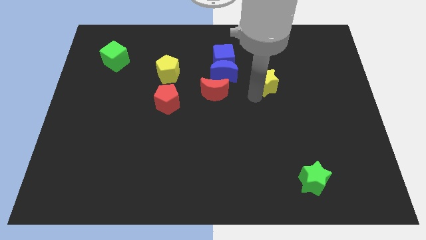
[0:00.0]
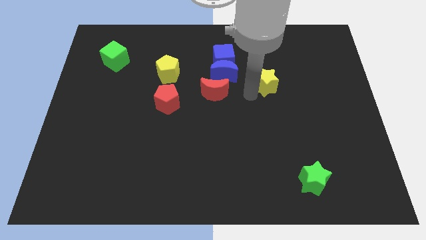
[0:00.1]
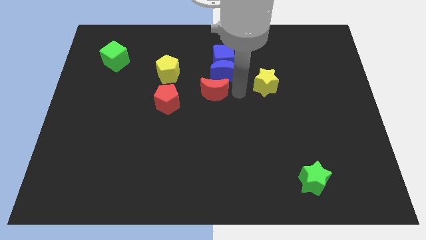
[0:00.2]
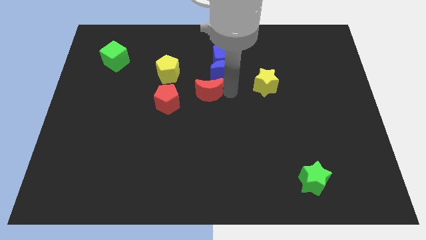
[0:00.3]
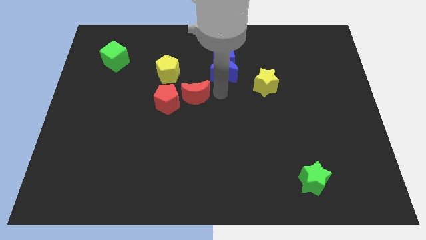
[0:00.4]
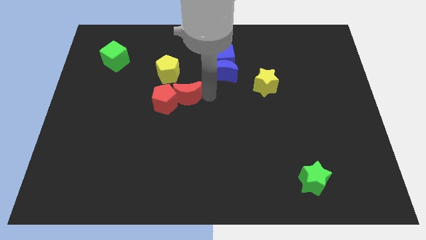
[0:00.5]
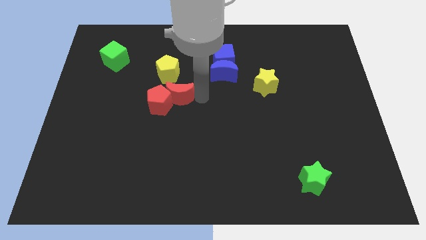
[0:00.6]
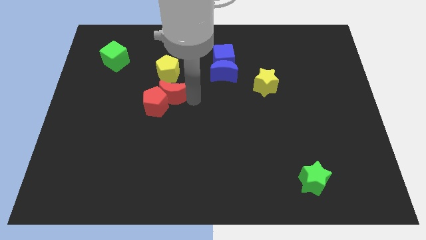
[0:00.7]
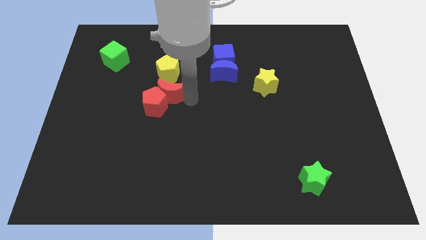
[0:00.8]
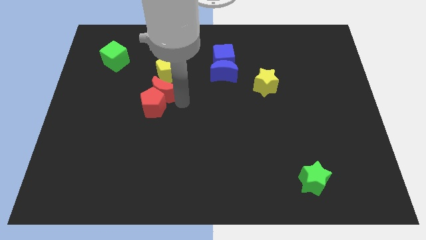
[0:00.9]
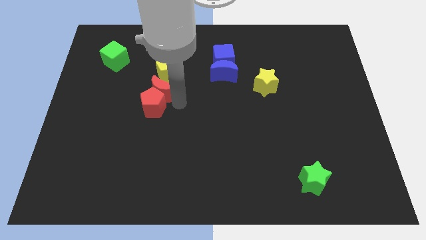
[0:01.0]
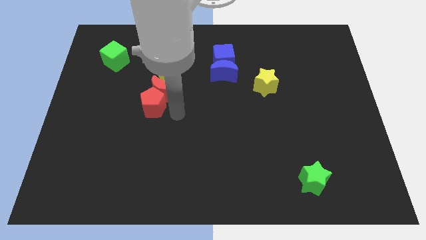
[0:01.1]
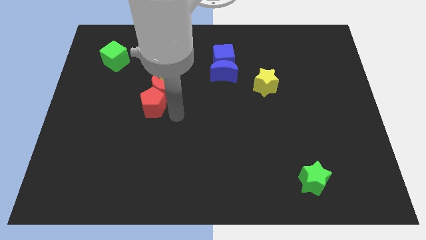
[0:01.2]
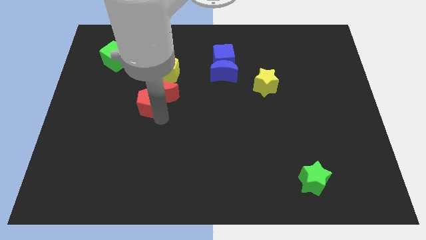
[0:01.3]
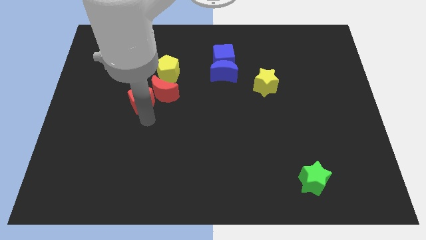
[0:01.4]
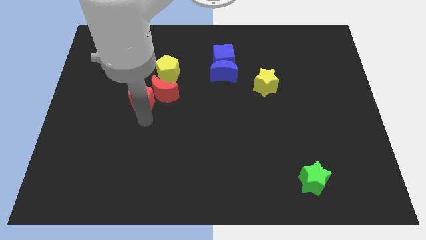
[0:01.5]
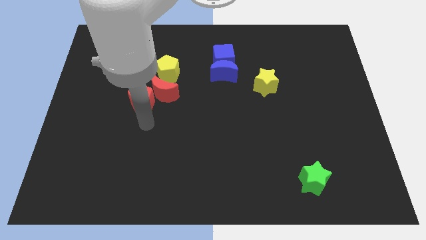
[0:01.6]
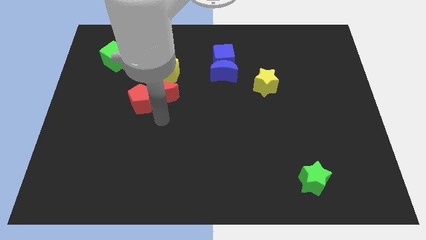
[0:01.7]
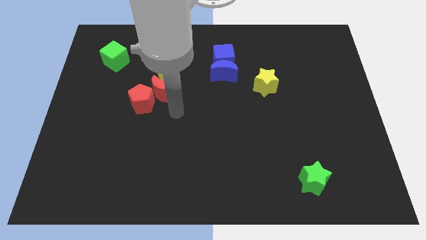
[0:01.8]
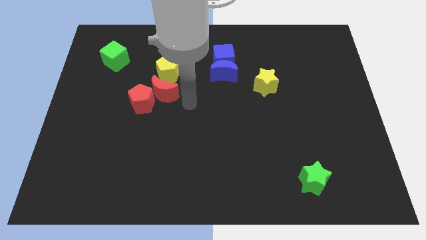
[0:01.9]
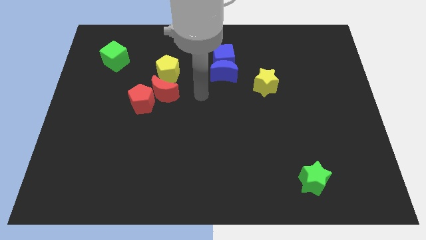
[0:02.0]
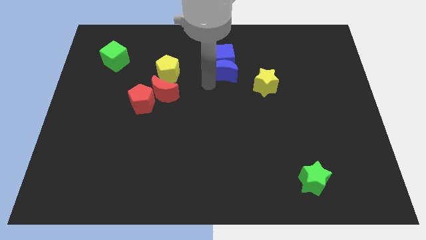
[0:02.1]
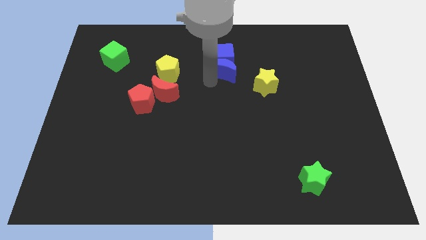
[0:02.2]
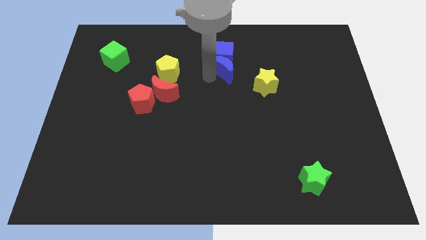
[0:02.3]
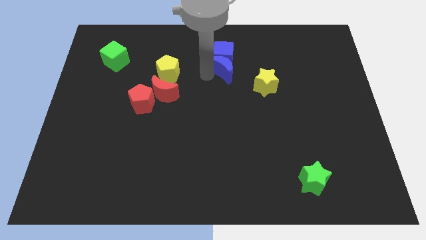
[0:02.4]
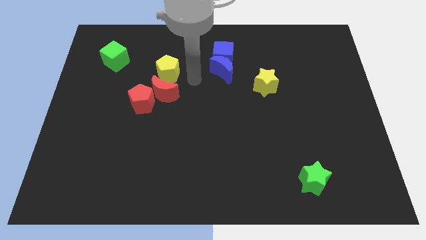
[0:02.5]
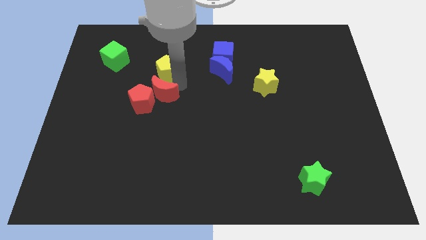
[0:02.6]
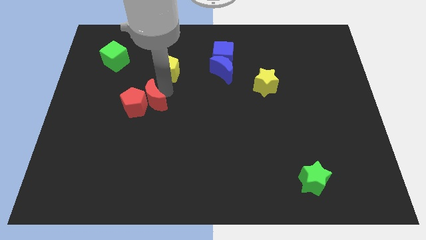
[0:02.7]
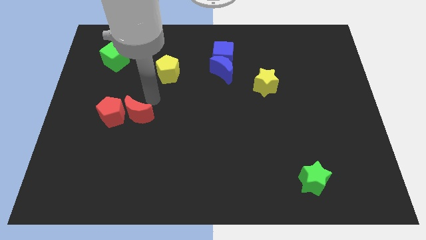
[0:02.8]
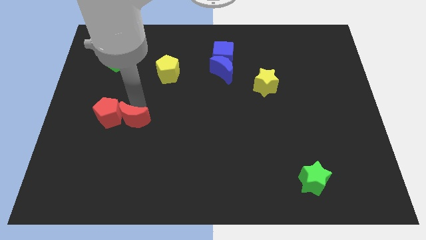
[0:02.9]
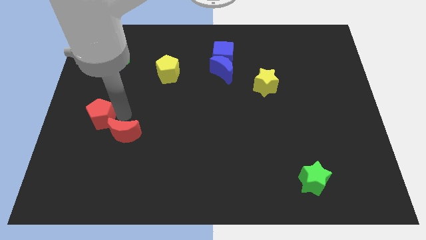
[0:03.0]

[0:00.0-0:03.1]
push the red moon into the red pentagon

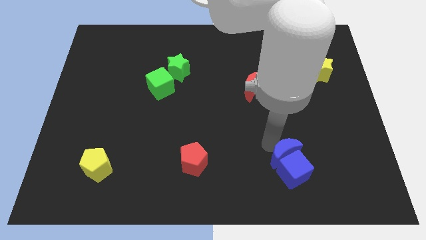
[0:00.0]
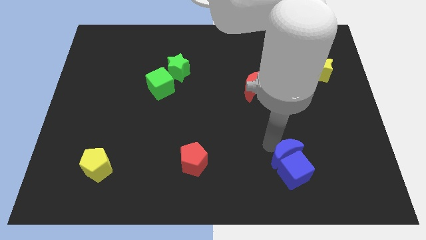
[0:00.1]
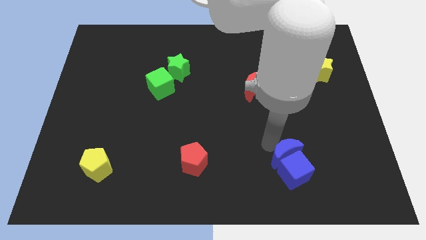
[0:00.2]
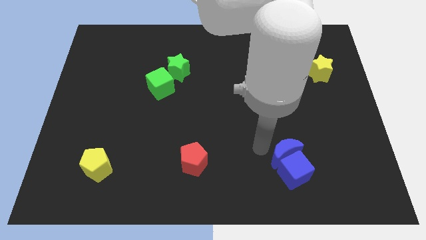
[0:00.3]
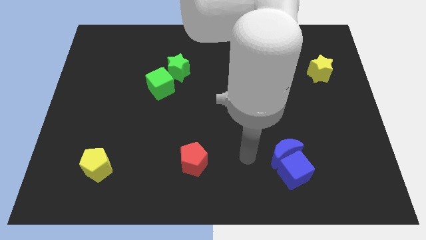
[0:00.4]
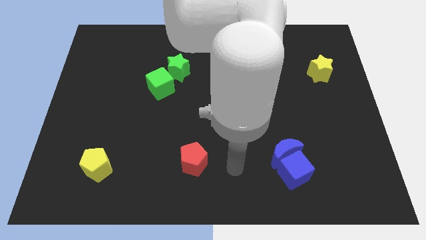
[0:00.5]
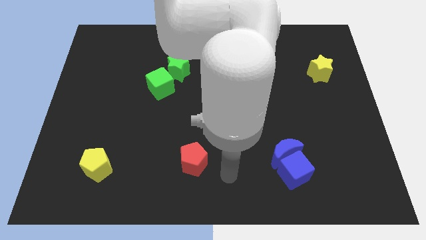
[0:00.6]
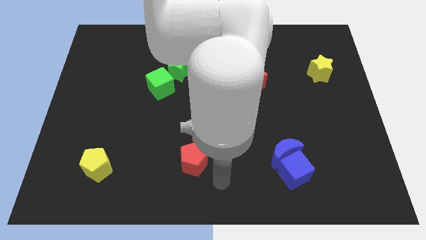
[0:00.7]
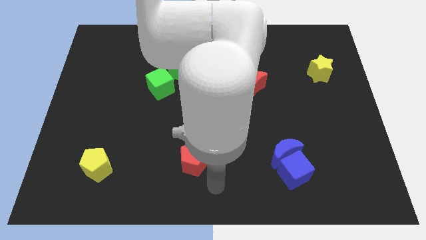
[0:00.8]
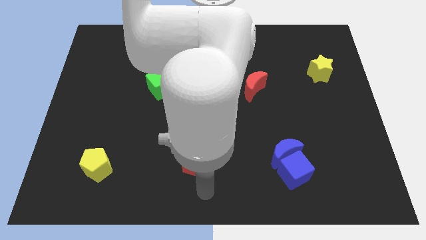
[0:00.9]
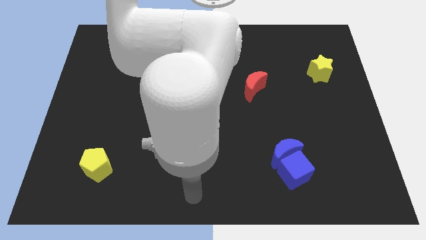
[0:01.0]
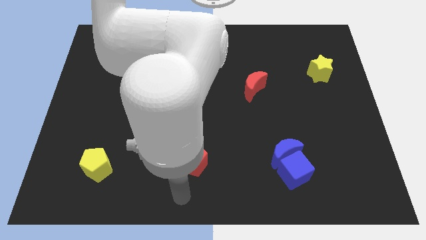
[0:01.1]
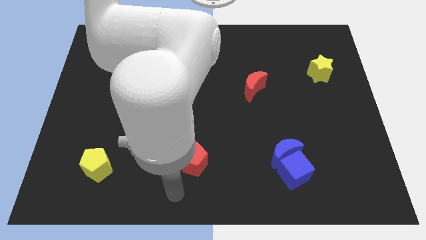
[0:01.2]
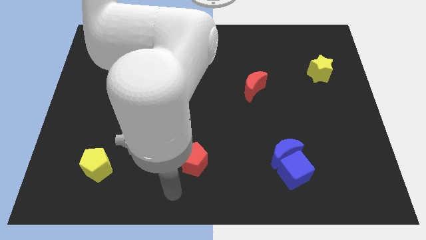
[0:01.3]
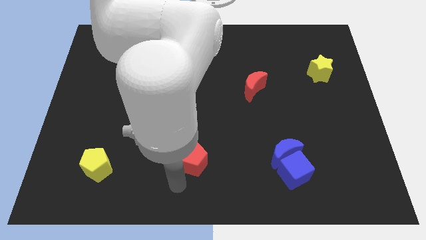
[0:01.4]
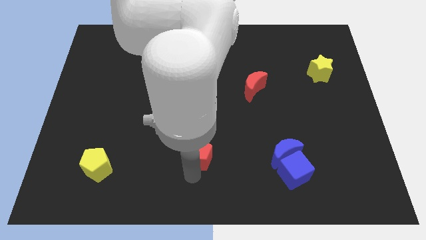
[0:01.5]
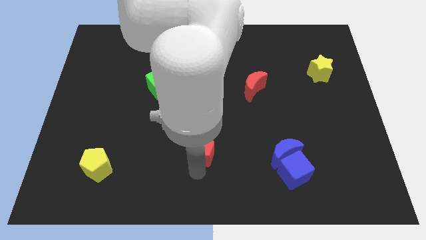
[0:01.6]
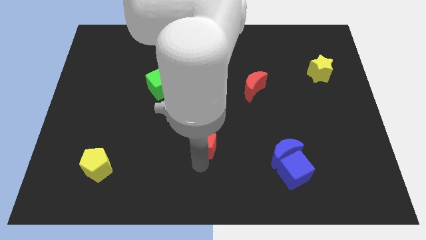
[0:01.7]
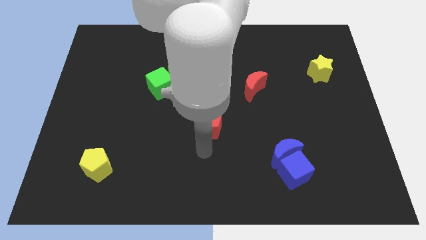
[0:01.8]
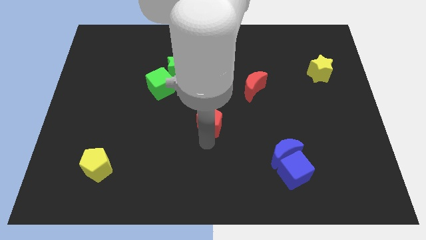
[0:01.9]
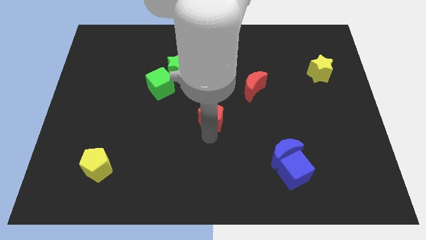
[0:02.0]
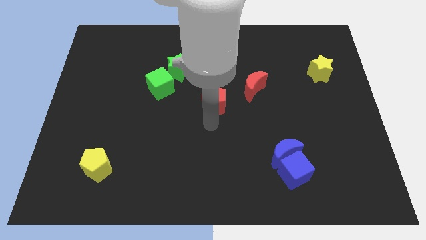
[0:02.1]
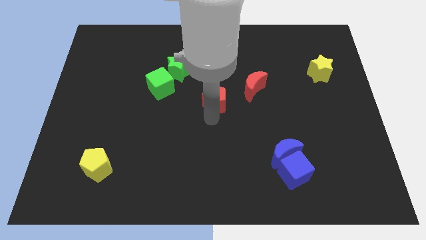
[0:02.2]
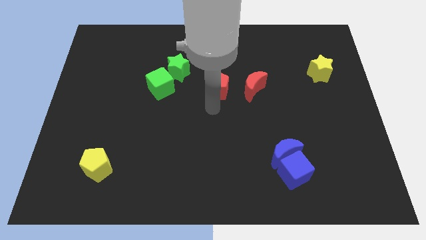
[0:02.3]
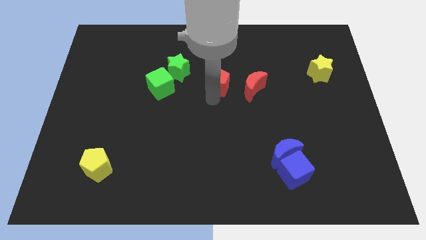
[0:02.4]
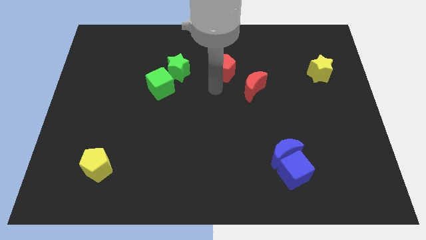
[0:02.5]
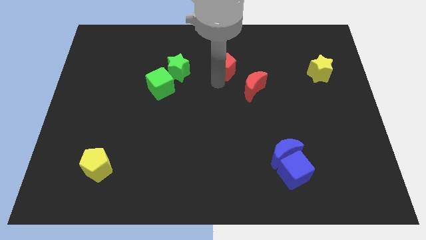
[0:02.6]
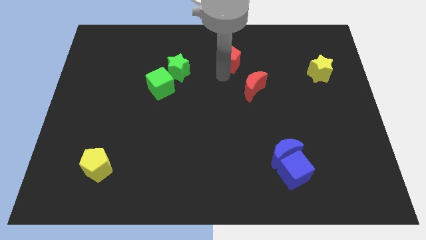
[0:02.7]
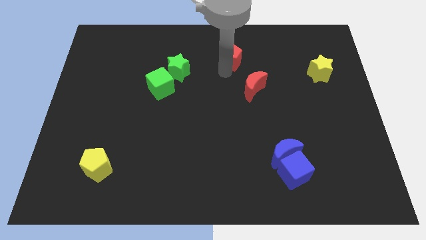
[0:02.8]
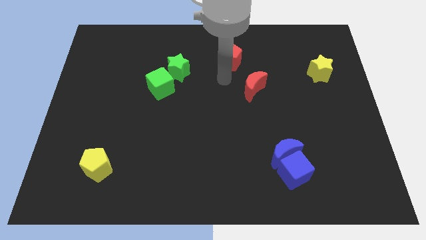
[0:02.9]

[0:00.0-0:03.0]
place red pentagon to the top left of red moon

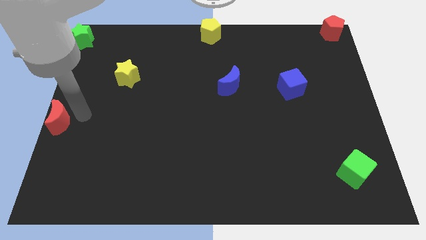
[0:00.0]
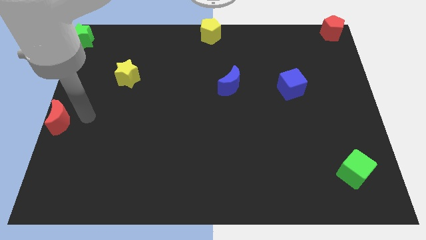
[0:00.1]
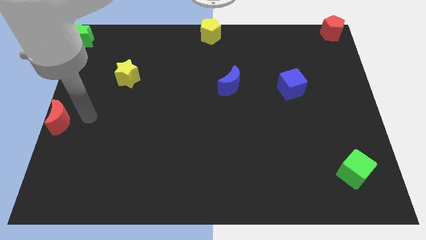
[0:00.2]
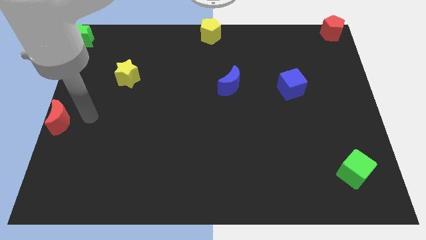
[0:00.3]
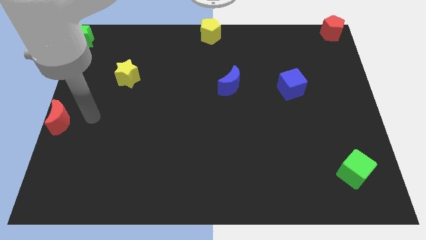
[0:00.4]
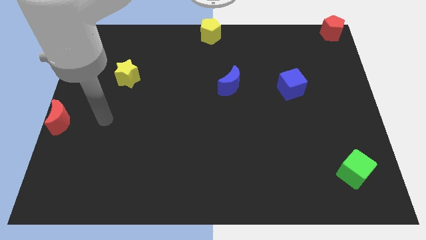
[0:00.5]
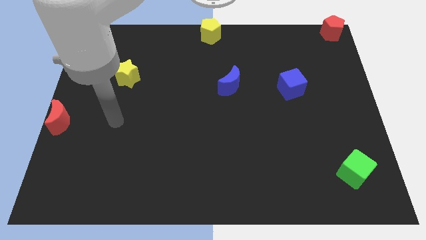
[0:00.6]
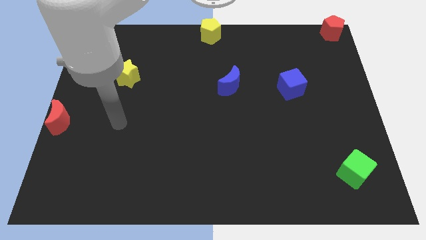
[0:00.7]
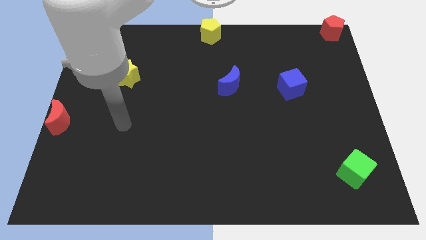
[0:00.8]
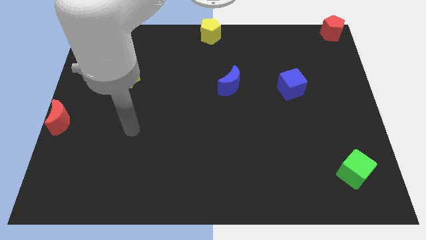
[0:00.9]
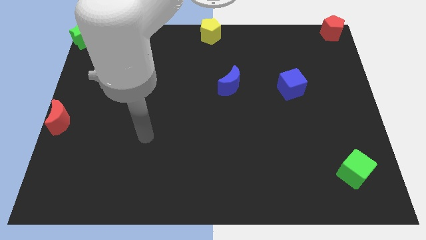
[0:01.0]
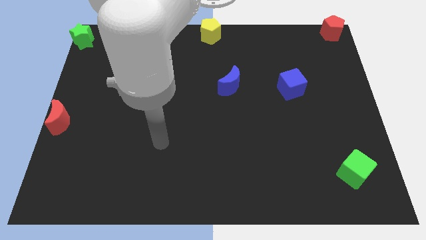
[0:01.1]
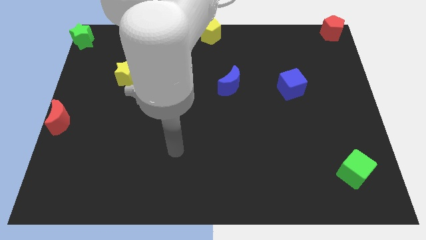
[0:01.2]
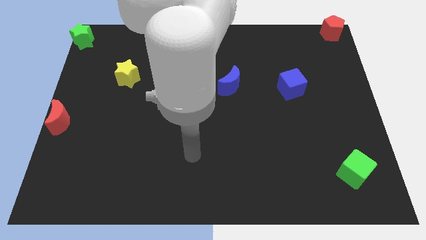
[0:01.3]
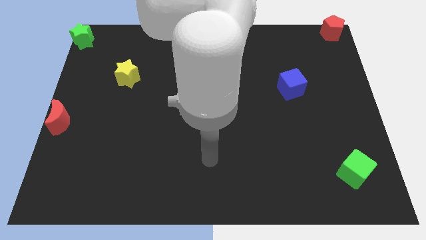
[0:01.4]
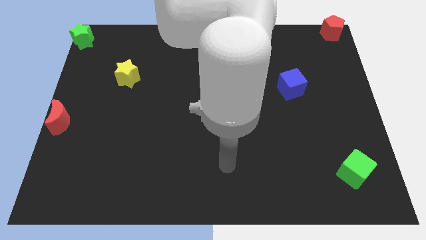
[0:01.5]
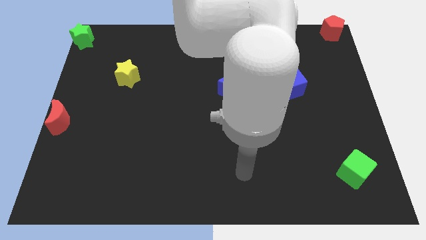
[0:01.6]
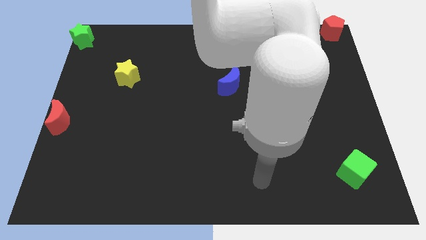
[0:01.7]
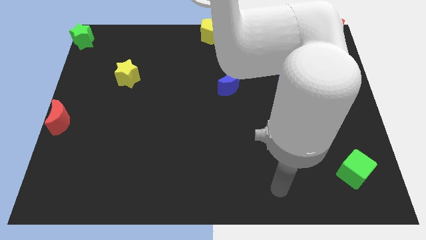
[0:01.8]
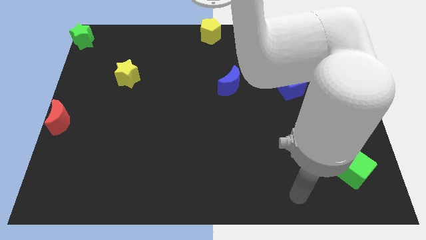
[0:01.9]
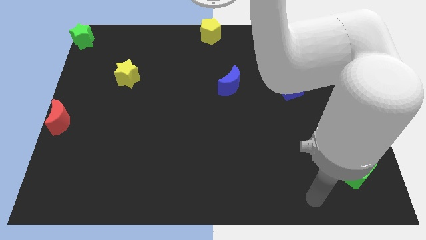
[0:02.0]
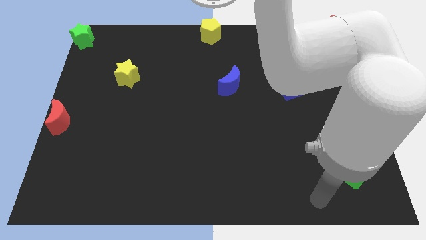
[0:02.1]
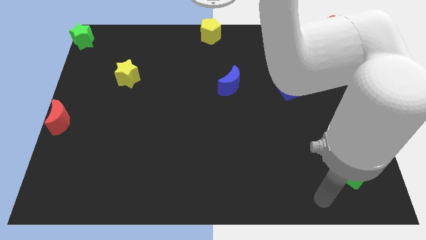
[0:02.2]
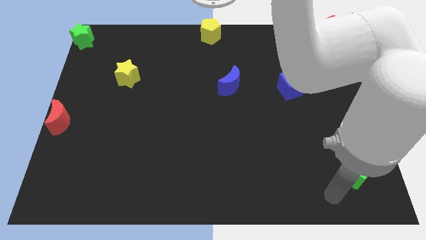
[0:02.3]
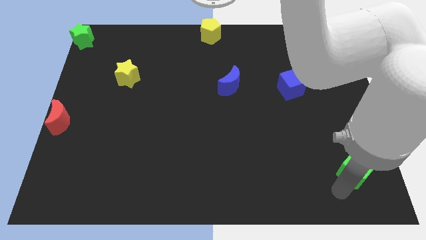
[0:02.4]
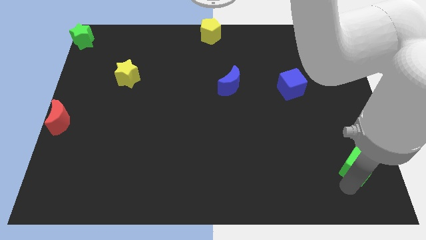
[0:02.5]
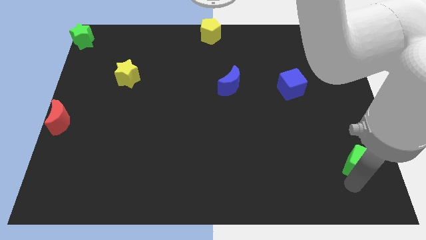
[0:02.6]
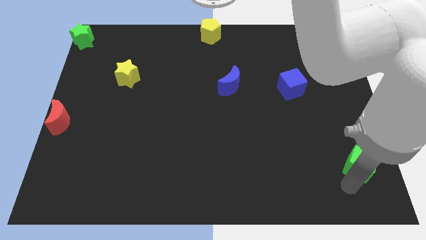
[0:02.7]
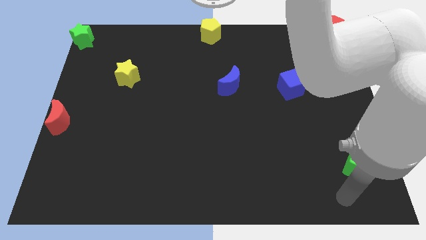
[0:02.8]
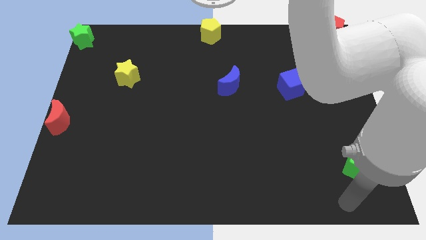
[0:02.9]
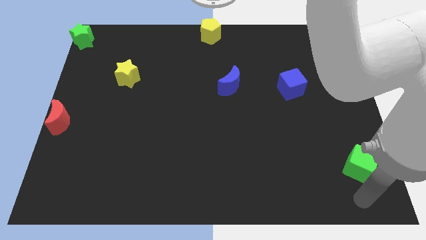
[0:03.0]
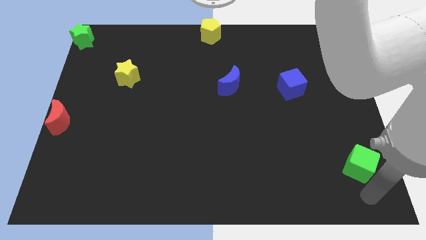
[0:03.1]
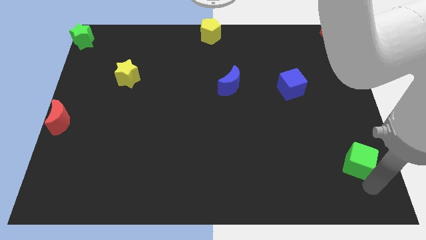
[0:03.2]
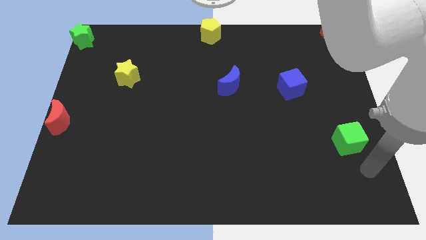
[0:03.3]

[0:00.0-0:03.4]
slide the green cube up slightly
